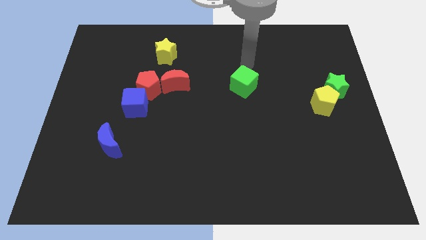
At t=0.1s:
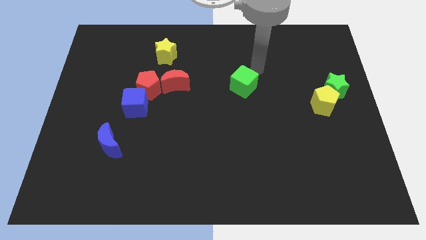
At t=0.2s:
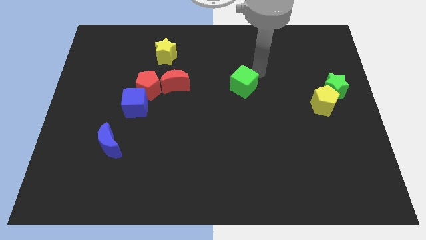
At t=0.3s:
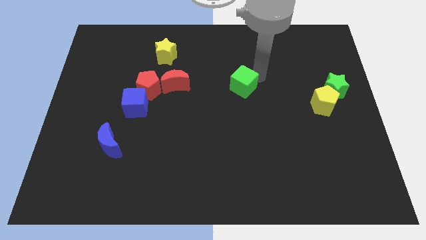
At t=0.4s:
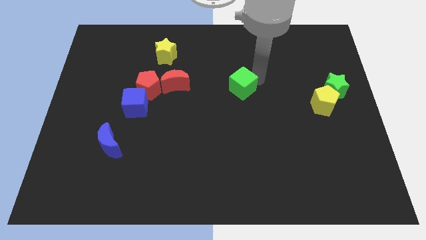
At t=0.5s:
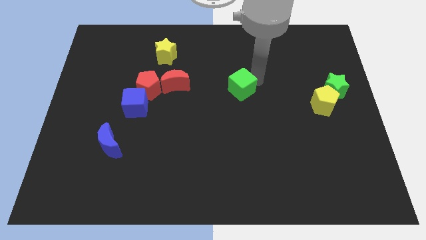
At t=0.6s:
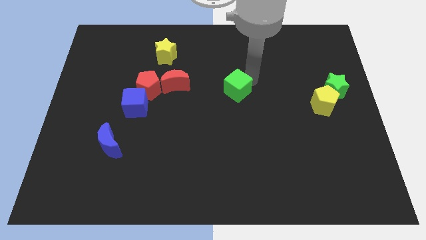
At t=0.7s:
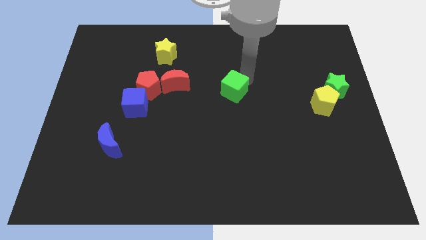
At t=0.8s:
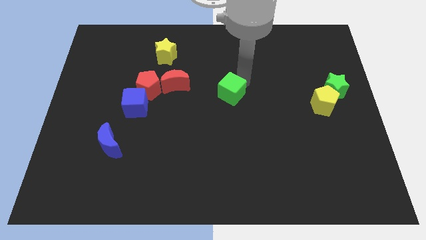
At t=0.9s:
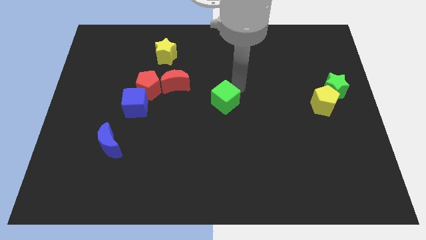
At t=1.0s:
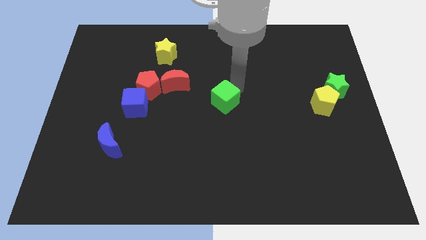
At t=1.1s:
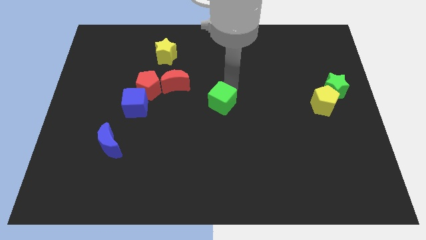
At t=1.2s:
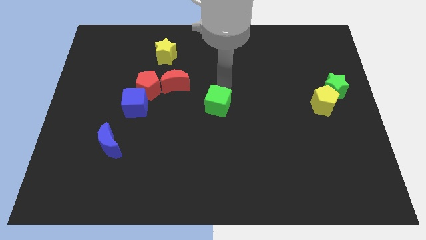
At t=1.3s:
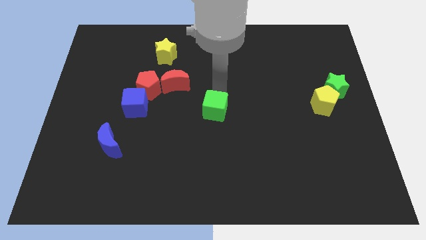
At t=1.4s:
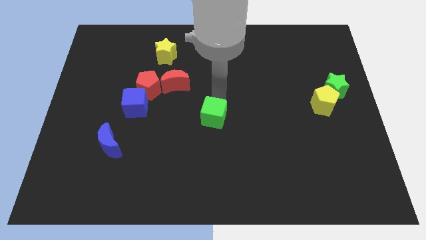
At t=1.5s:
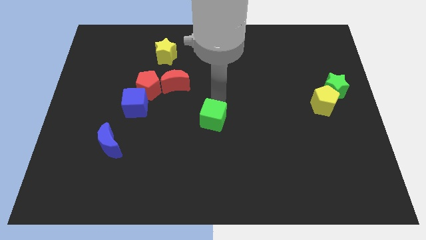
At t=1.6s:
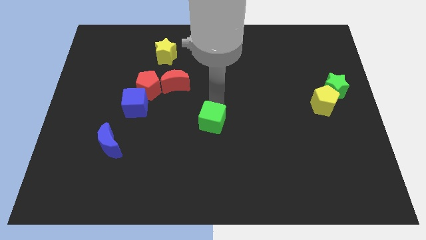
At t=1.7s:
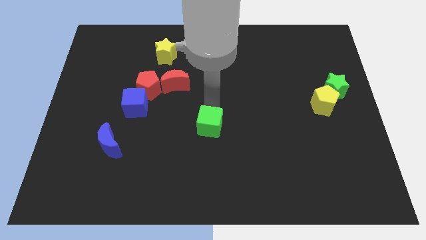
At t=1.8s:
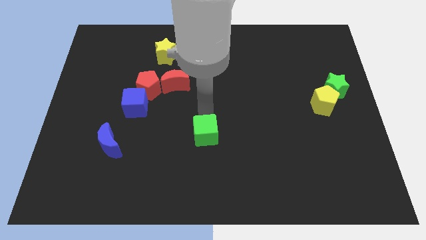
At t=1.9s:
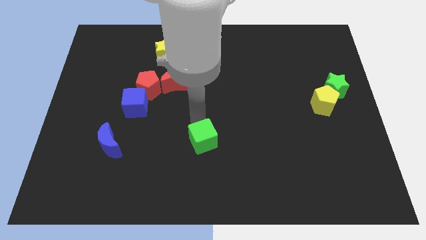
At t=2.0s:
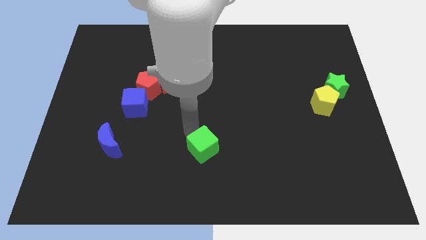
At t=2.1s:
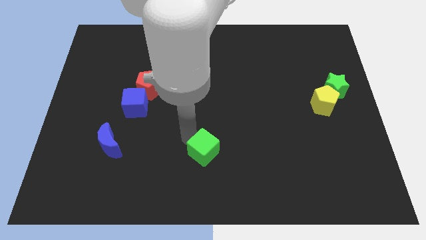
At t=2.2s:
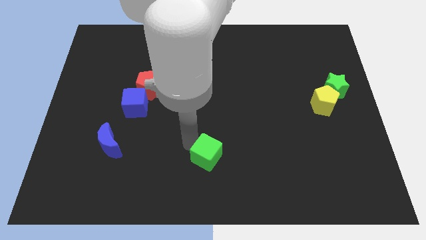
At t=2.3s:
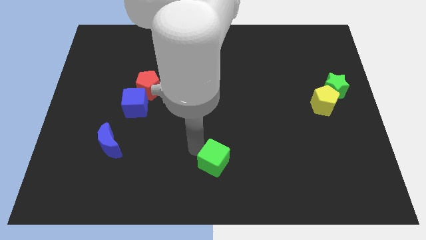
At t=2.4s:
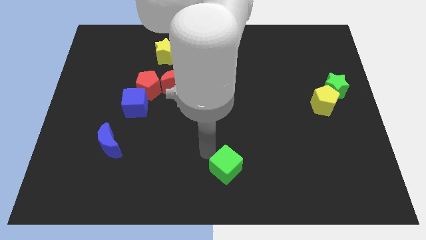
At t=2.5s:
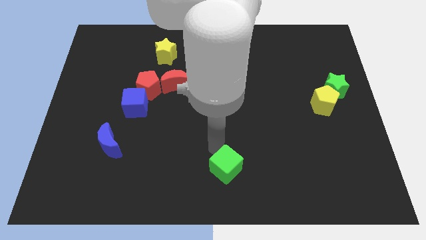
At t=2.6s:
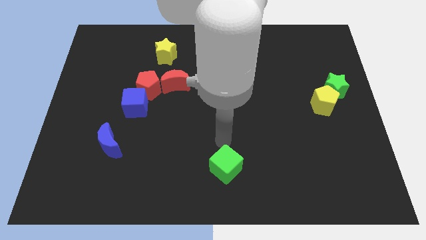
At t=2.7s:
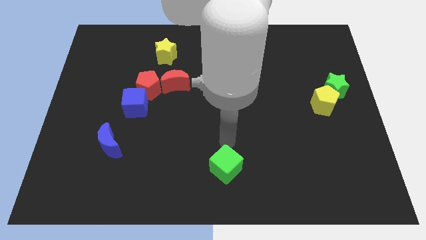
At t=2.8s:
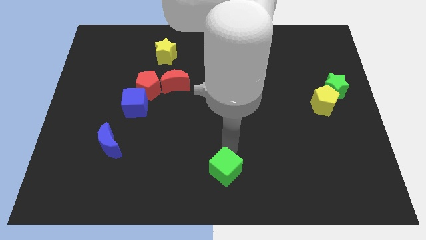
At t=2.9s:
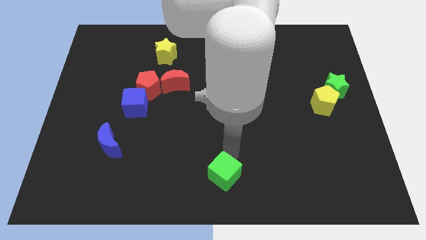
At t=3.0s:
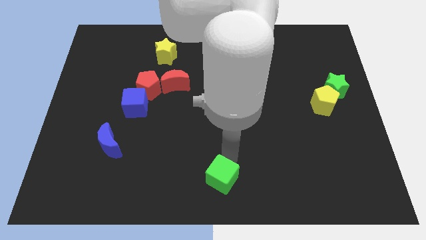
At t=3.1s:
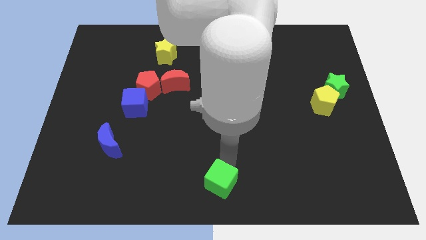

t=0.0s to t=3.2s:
push the green cube to the bottom center

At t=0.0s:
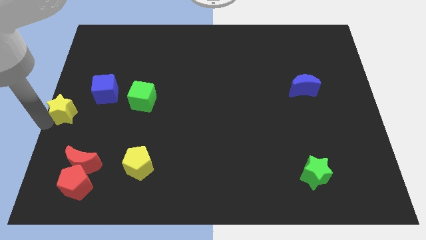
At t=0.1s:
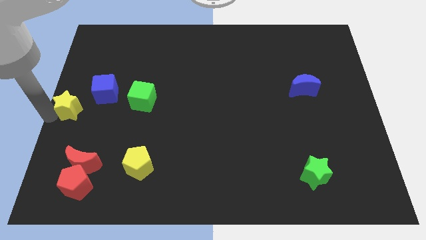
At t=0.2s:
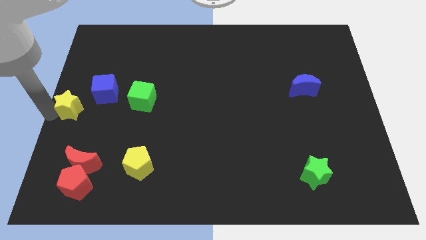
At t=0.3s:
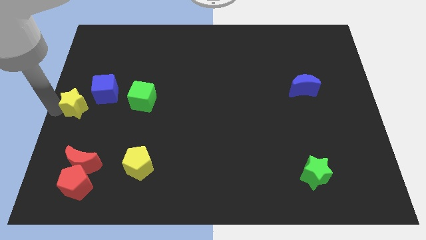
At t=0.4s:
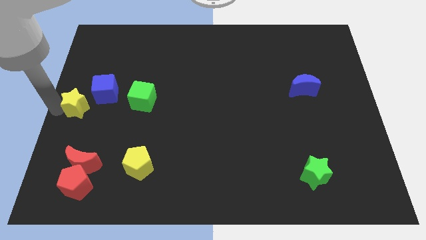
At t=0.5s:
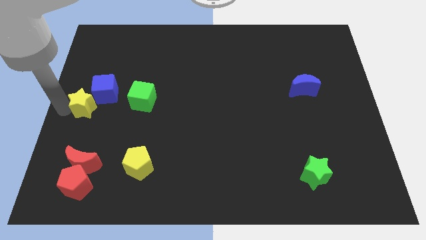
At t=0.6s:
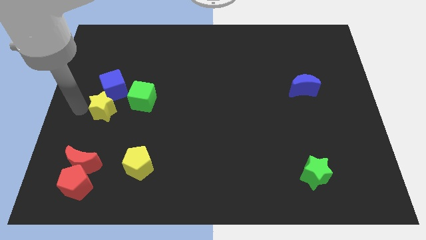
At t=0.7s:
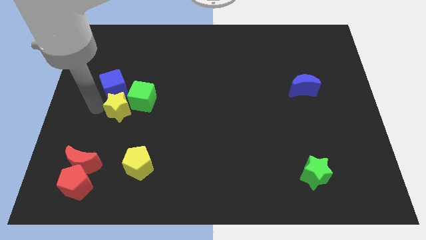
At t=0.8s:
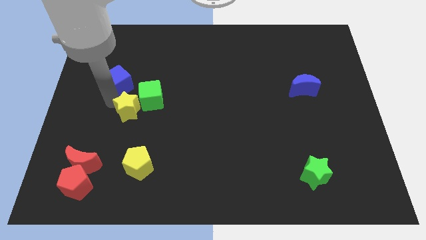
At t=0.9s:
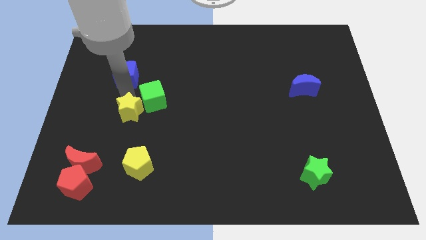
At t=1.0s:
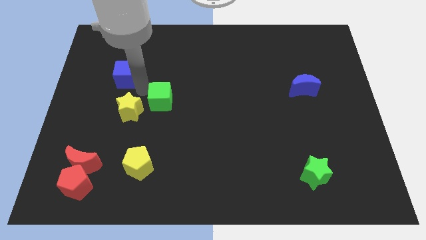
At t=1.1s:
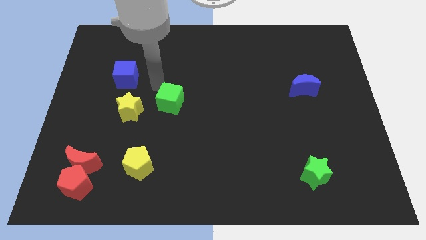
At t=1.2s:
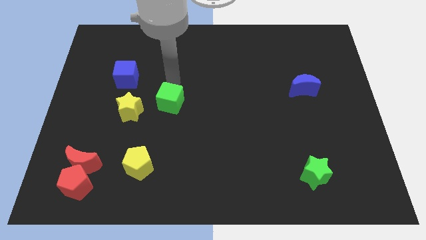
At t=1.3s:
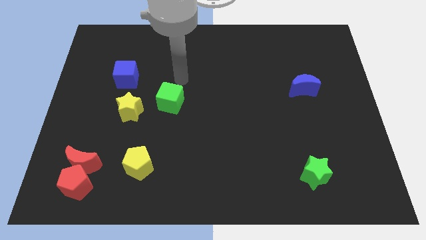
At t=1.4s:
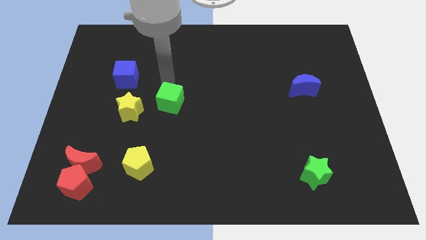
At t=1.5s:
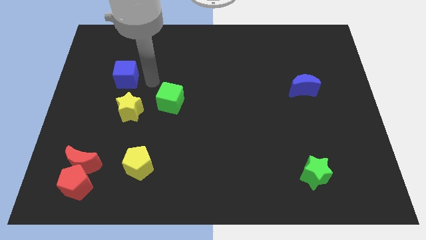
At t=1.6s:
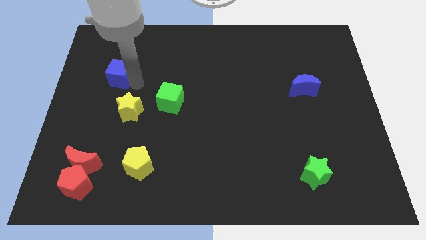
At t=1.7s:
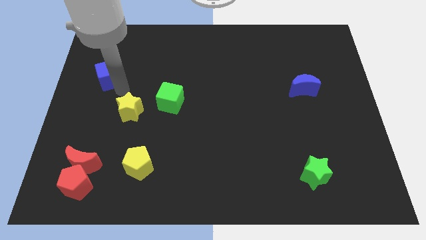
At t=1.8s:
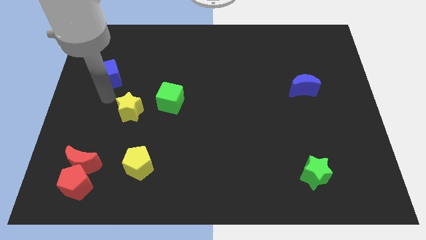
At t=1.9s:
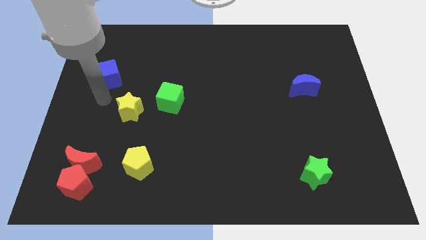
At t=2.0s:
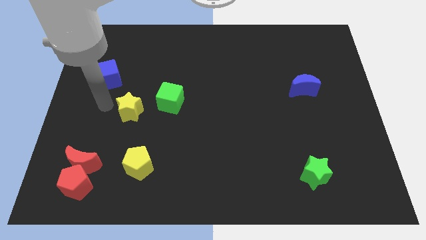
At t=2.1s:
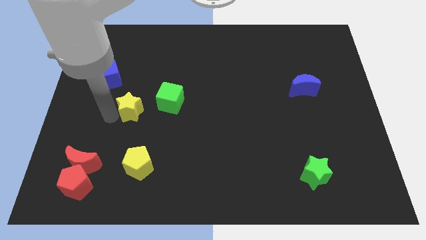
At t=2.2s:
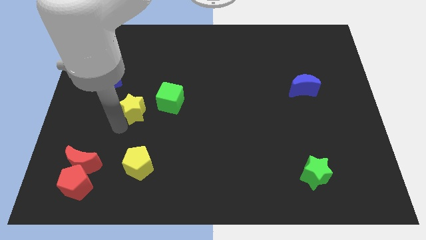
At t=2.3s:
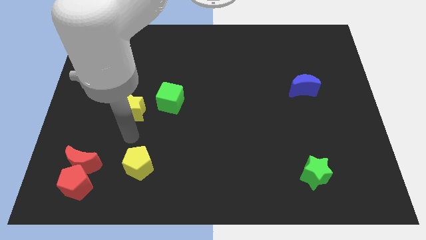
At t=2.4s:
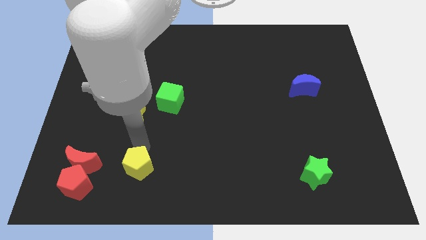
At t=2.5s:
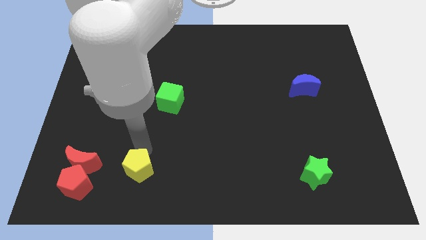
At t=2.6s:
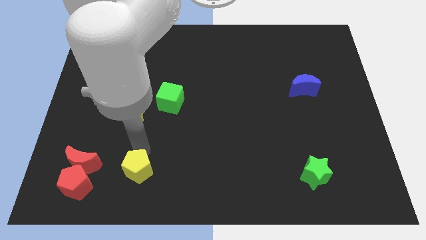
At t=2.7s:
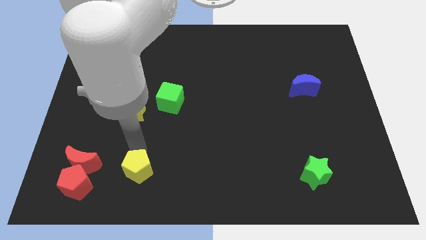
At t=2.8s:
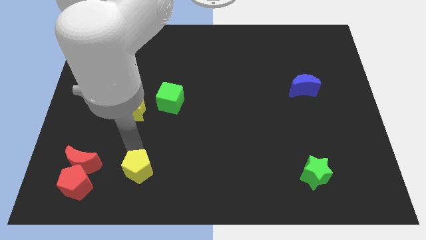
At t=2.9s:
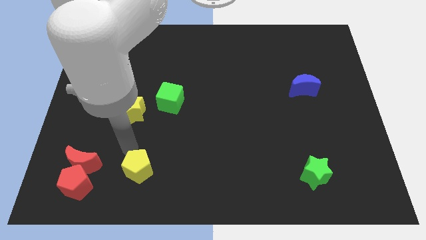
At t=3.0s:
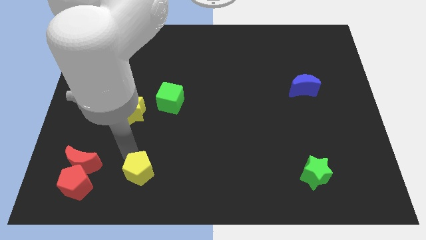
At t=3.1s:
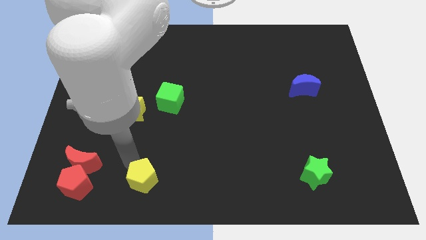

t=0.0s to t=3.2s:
push the yellow star on top of the yellow pentagon

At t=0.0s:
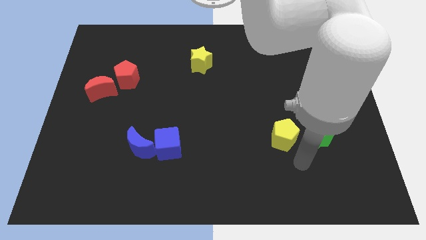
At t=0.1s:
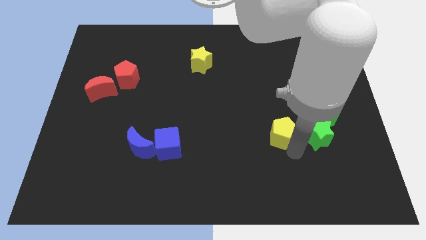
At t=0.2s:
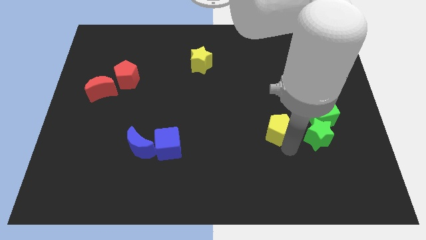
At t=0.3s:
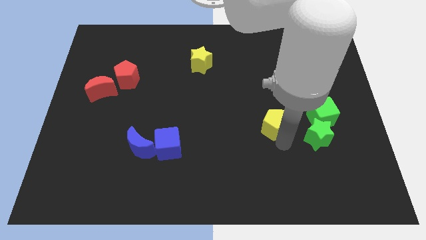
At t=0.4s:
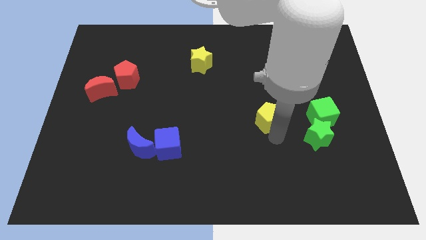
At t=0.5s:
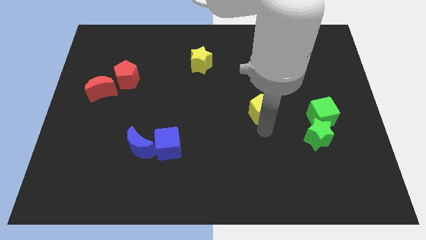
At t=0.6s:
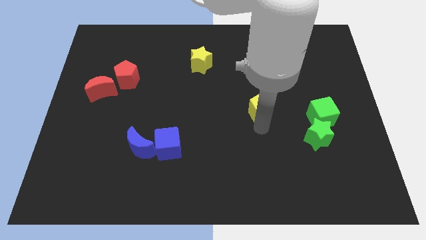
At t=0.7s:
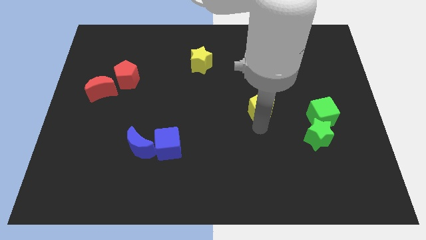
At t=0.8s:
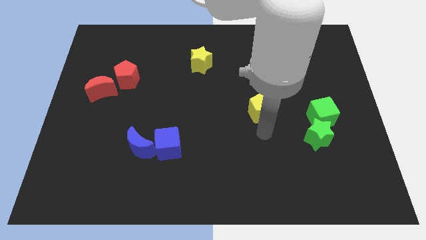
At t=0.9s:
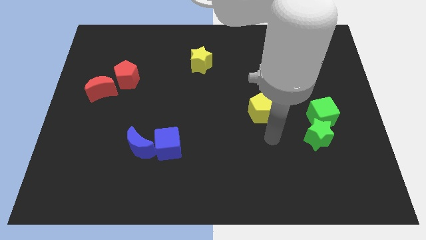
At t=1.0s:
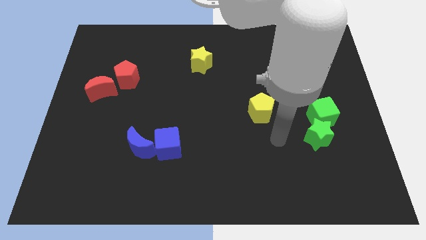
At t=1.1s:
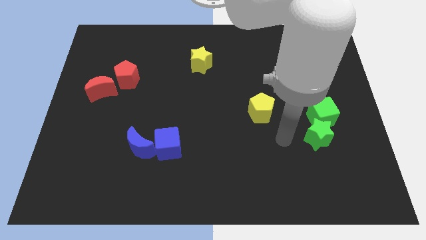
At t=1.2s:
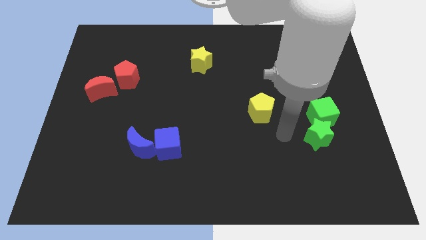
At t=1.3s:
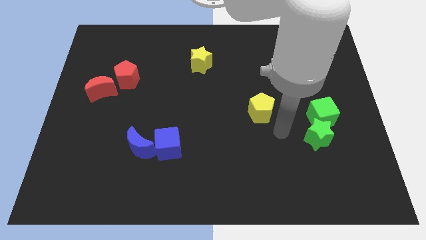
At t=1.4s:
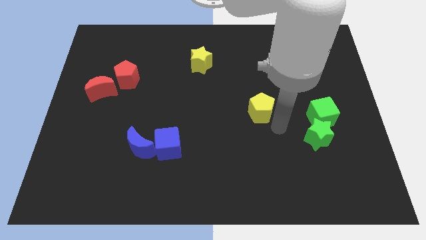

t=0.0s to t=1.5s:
place the yellow pentagon between the yellow star and green star

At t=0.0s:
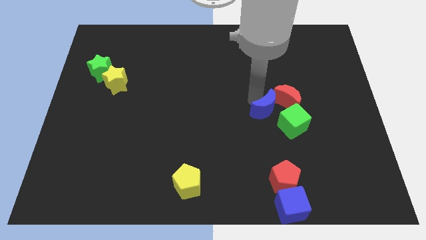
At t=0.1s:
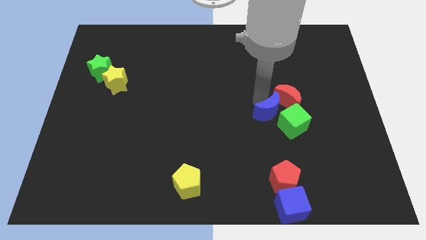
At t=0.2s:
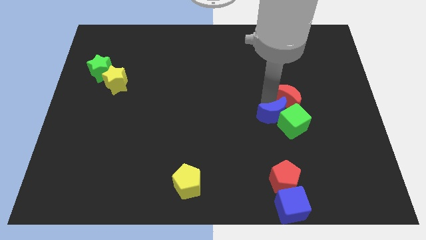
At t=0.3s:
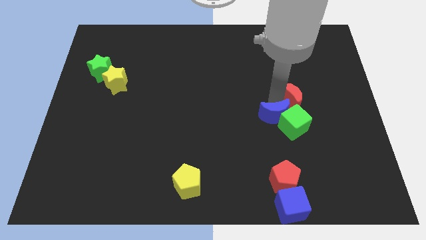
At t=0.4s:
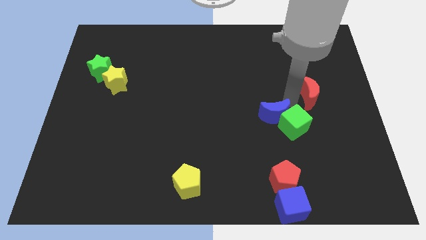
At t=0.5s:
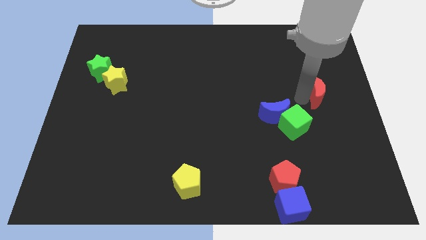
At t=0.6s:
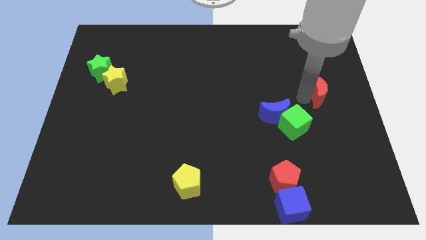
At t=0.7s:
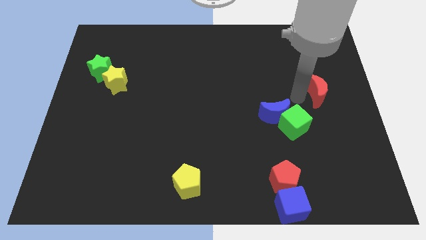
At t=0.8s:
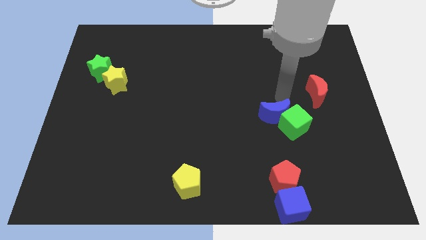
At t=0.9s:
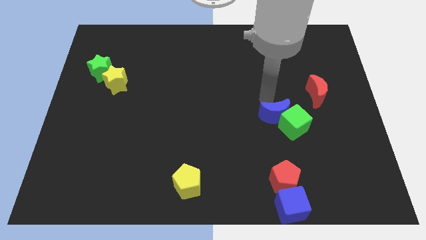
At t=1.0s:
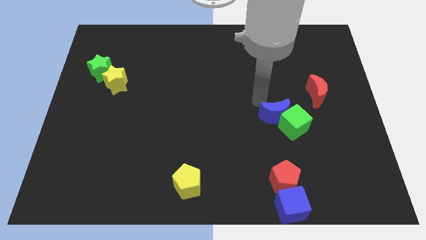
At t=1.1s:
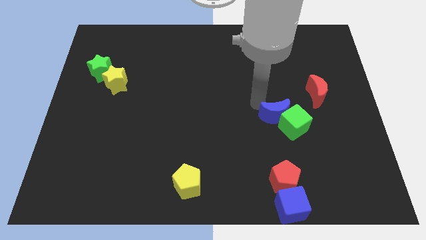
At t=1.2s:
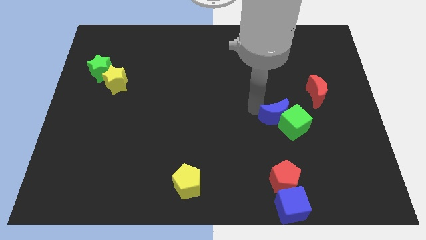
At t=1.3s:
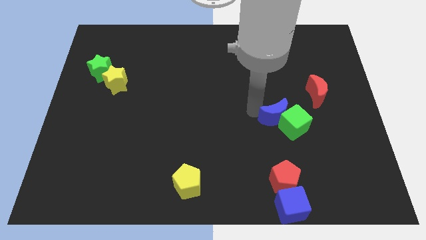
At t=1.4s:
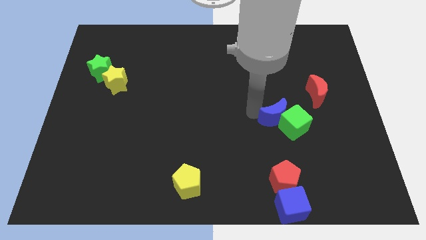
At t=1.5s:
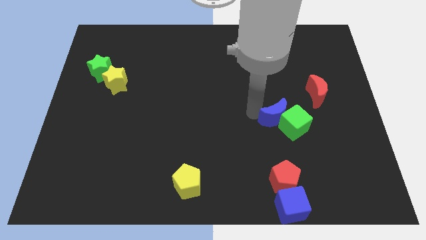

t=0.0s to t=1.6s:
push the red moon towards right
